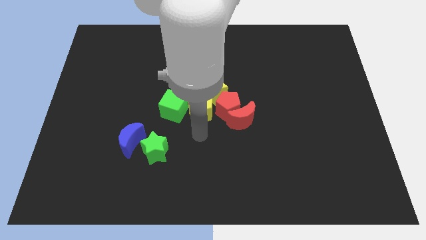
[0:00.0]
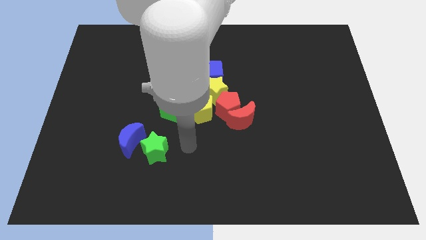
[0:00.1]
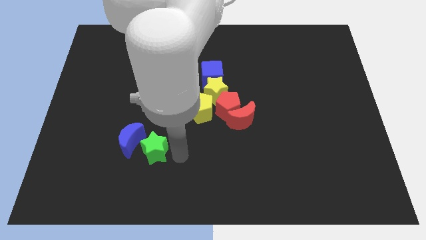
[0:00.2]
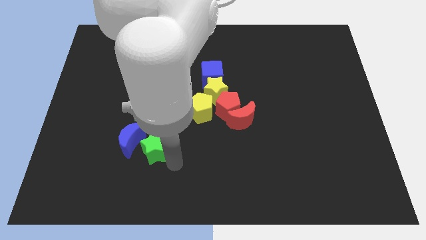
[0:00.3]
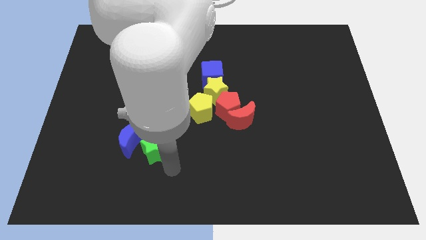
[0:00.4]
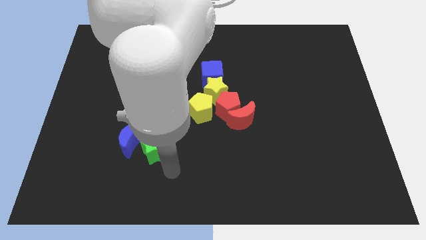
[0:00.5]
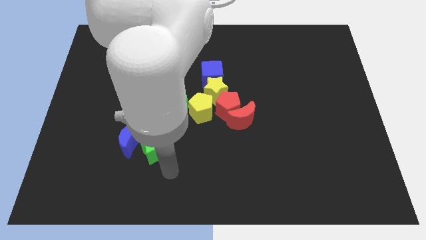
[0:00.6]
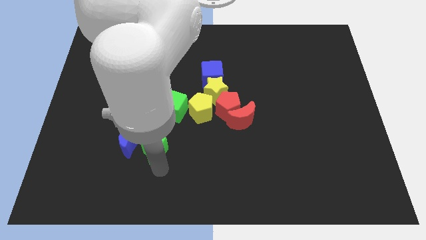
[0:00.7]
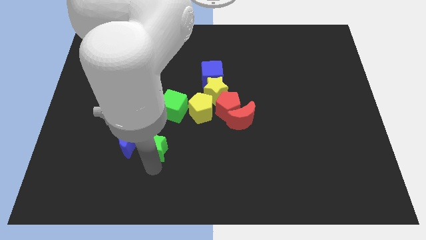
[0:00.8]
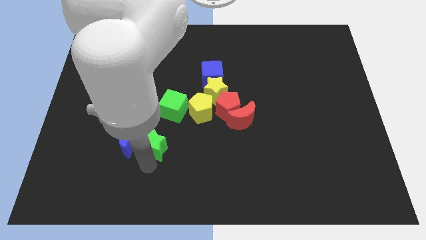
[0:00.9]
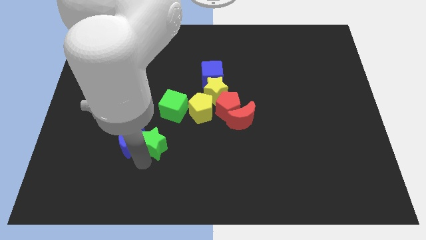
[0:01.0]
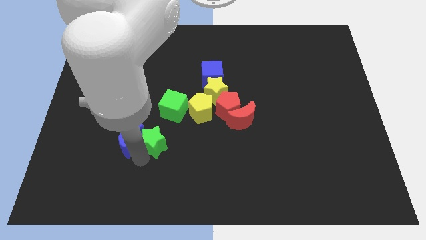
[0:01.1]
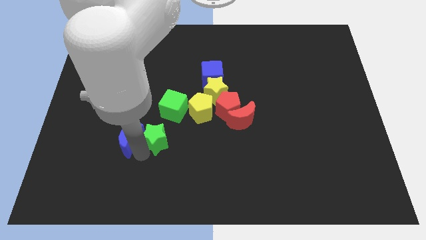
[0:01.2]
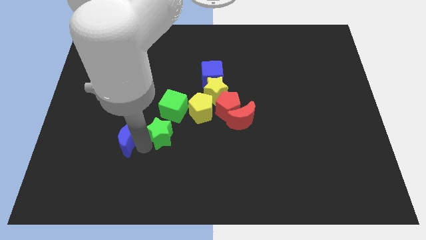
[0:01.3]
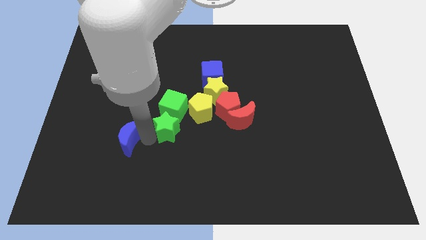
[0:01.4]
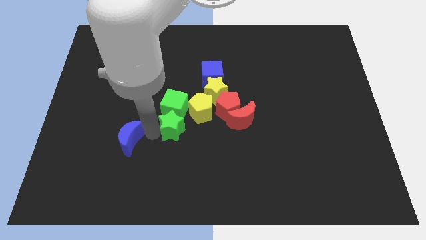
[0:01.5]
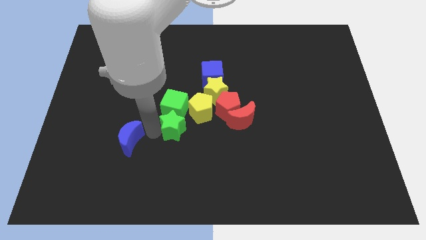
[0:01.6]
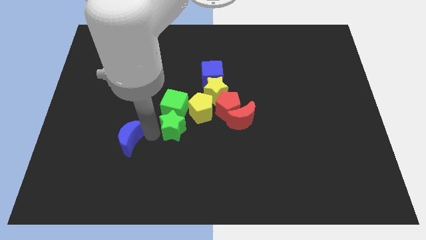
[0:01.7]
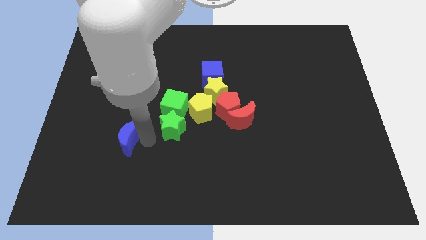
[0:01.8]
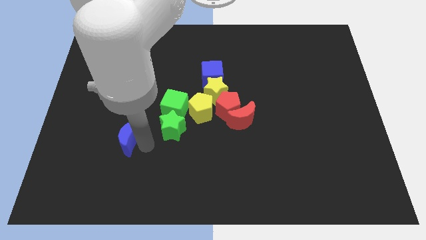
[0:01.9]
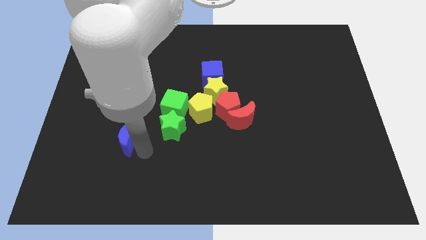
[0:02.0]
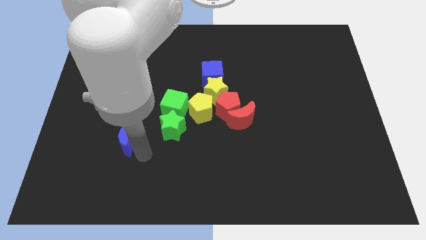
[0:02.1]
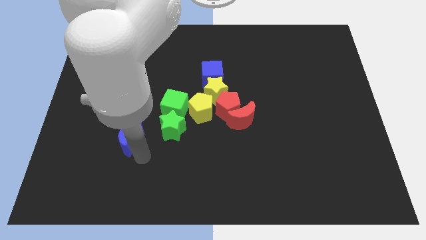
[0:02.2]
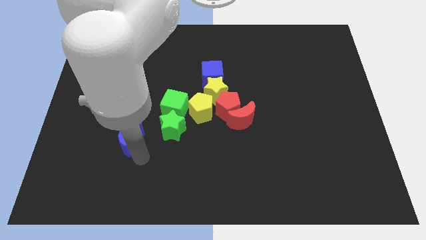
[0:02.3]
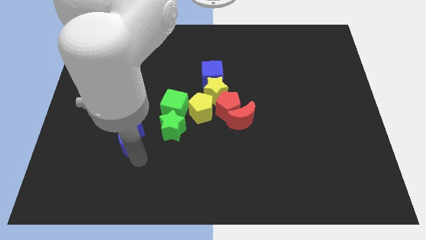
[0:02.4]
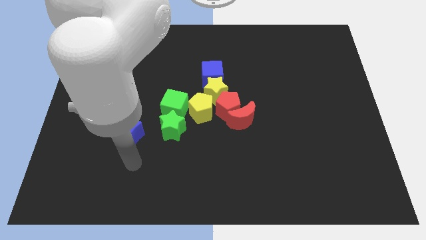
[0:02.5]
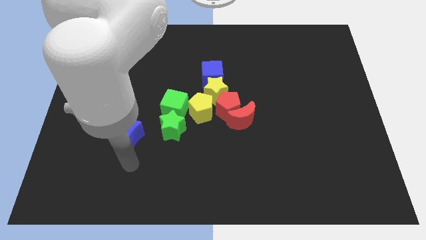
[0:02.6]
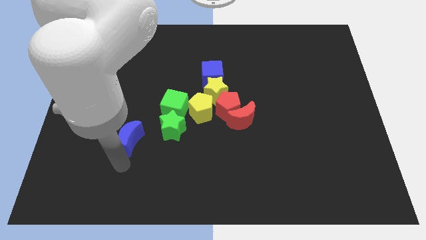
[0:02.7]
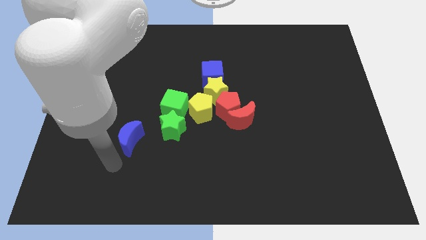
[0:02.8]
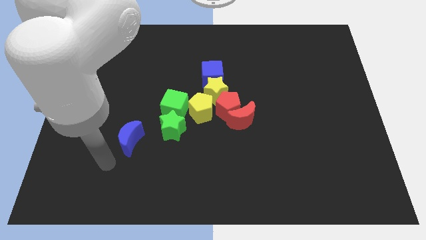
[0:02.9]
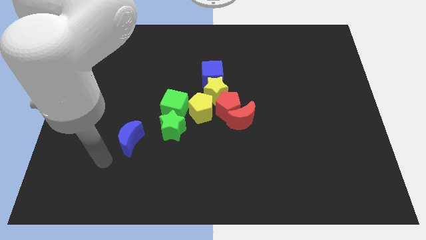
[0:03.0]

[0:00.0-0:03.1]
move green star to the bottom of the green block

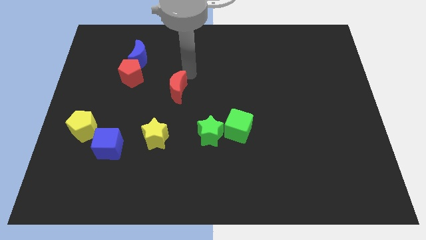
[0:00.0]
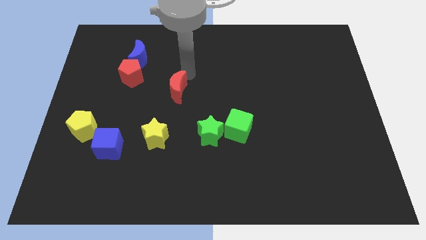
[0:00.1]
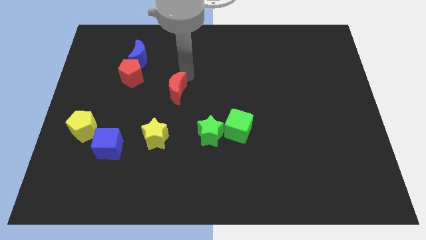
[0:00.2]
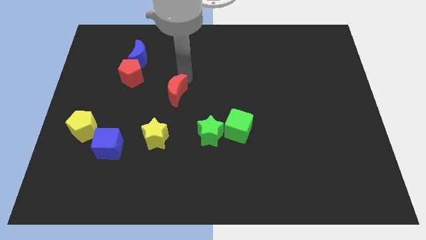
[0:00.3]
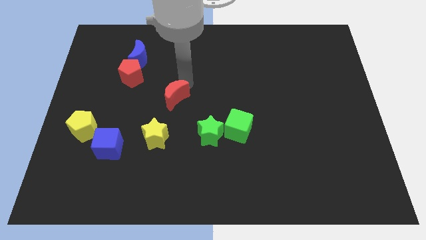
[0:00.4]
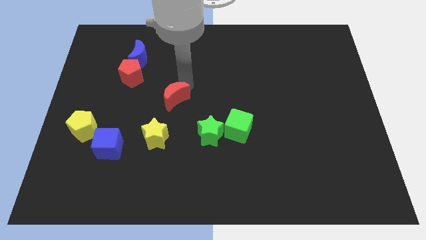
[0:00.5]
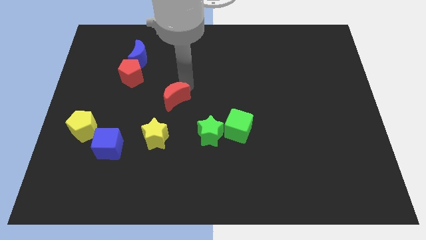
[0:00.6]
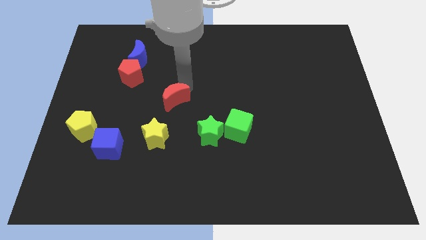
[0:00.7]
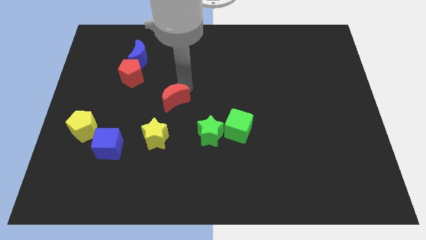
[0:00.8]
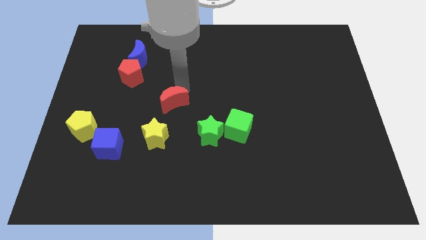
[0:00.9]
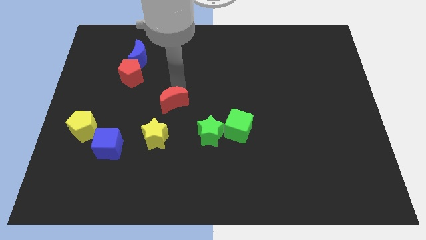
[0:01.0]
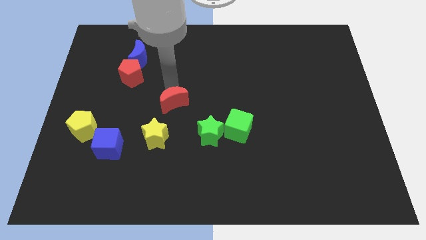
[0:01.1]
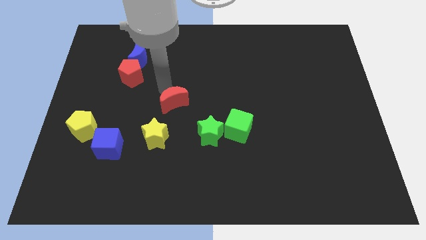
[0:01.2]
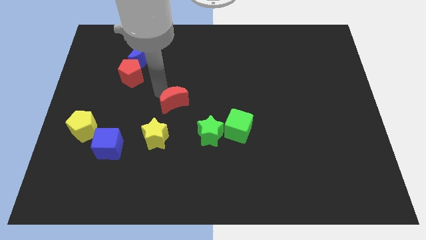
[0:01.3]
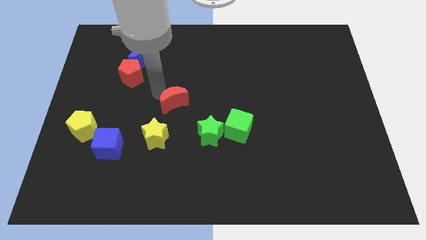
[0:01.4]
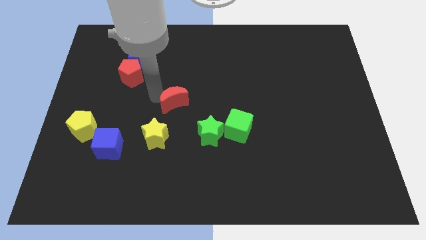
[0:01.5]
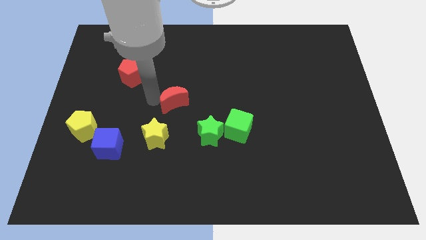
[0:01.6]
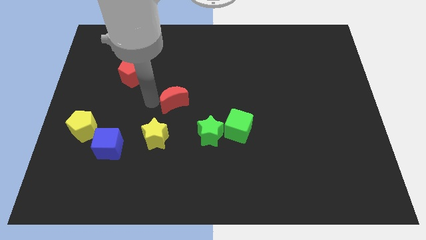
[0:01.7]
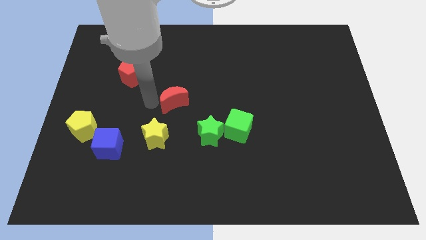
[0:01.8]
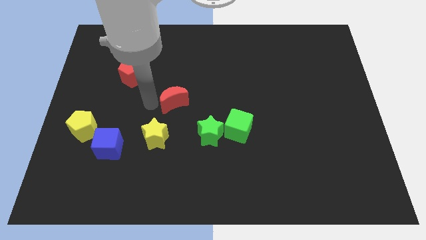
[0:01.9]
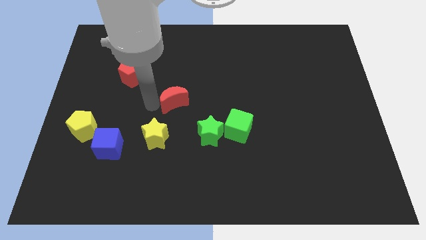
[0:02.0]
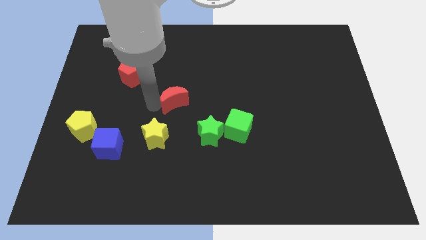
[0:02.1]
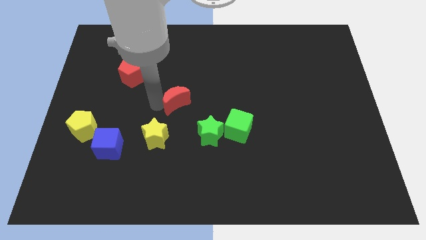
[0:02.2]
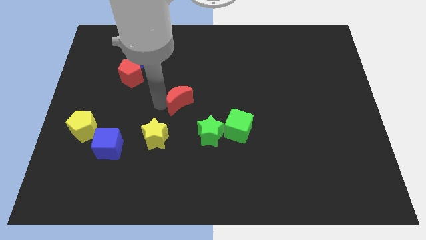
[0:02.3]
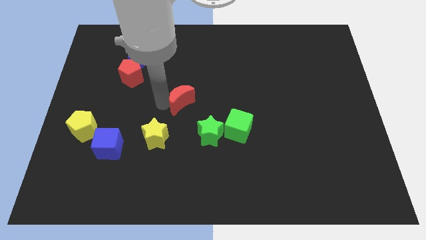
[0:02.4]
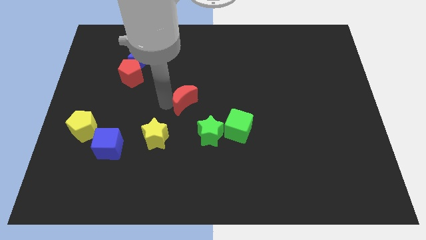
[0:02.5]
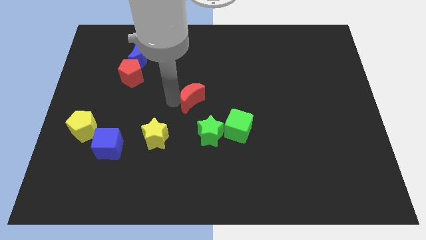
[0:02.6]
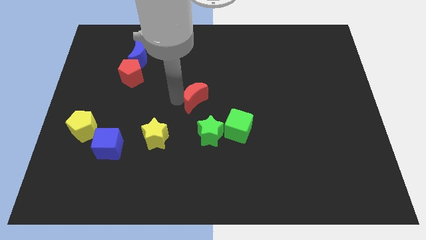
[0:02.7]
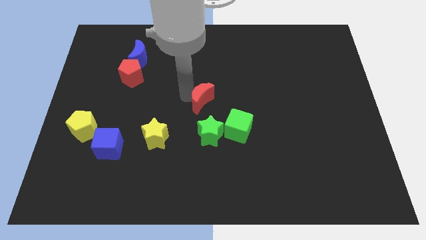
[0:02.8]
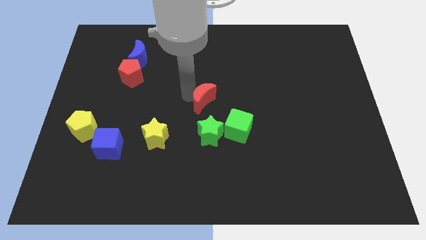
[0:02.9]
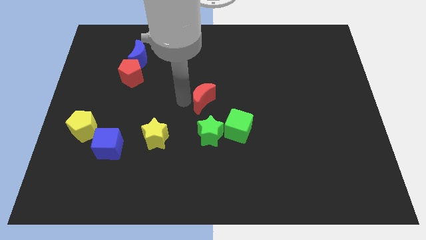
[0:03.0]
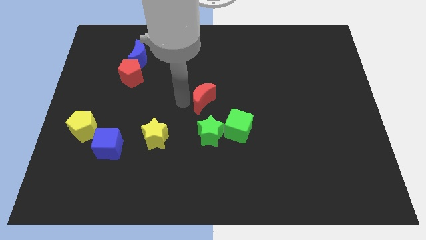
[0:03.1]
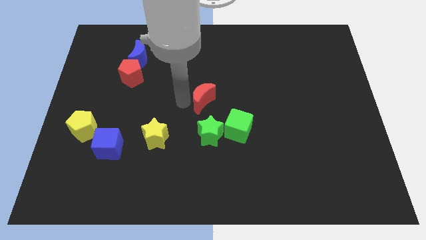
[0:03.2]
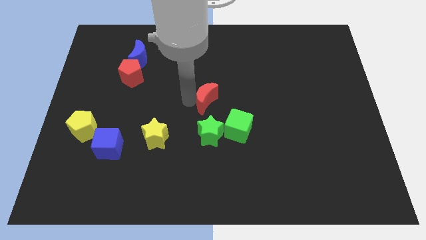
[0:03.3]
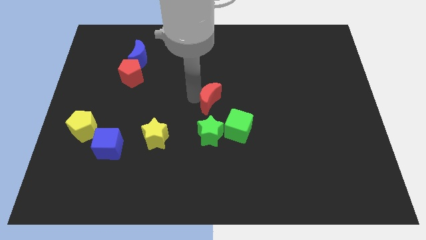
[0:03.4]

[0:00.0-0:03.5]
push the red crescent above the green star

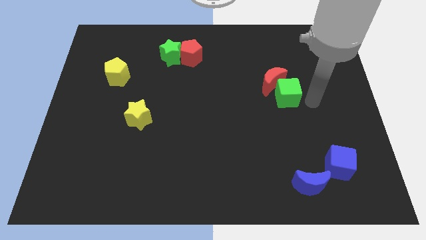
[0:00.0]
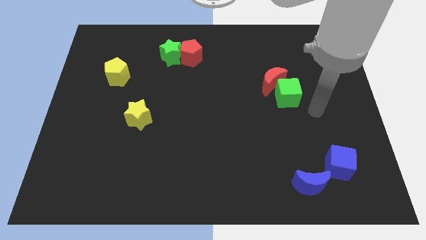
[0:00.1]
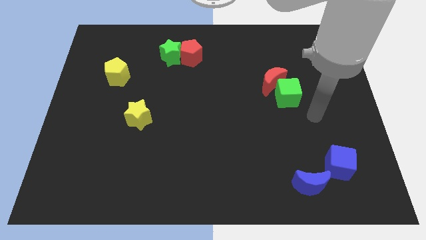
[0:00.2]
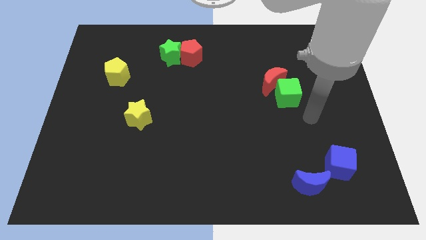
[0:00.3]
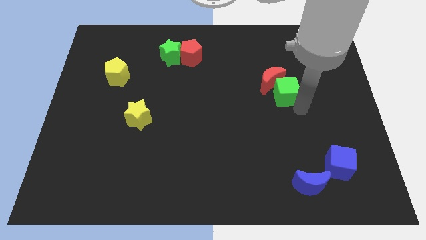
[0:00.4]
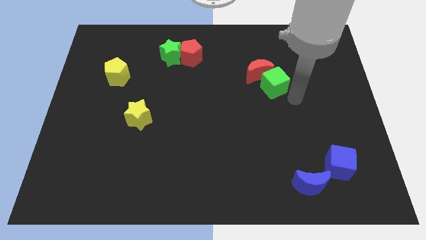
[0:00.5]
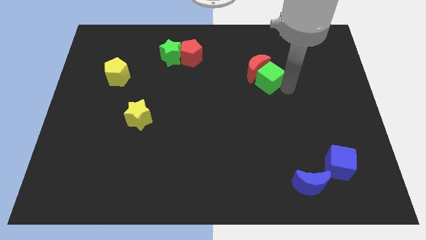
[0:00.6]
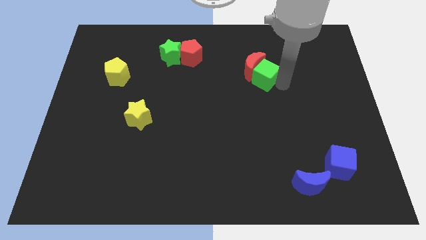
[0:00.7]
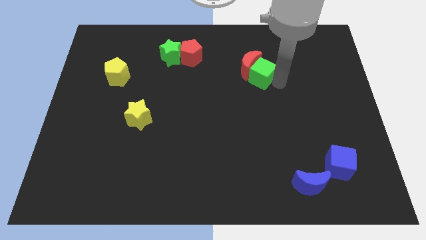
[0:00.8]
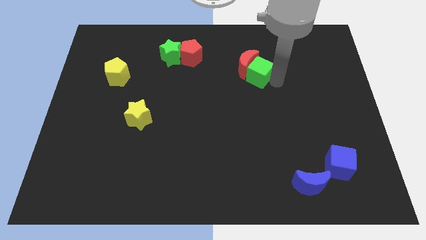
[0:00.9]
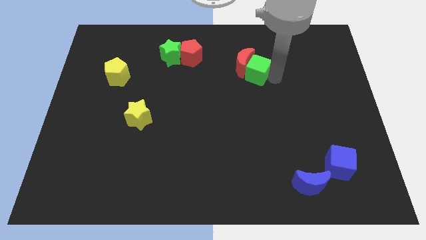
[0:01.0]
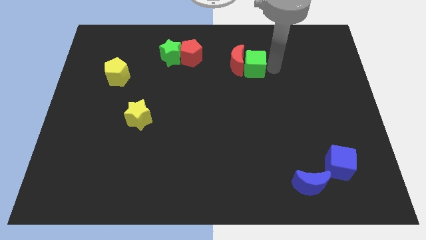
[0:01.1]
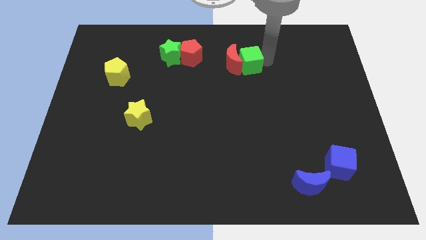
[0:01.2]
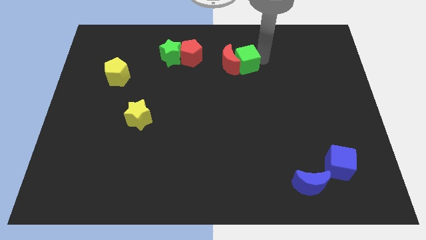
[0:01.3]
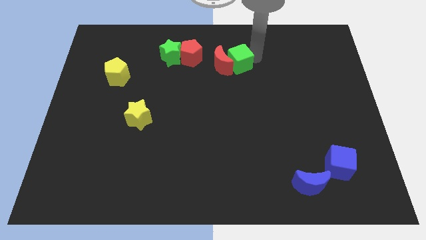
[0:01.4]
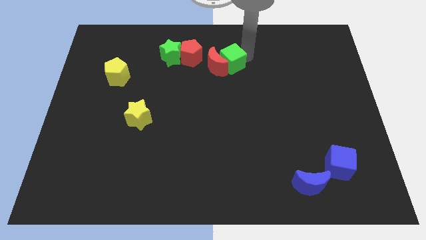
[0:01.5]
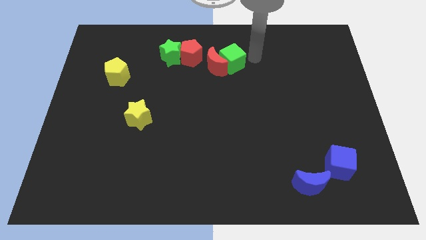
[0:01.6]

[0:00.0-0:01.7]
push the green cube along with red crescent to the top center of the board

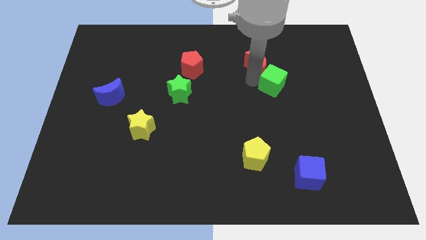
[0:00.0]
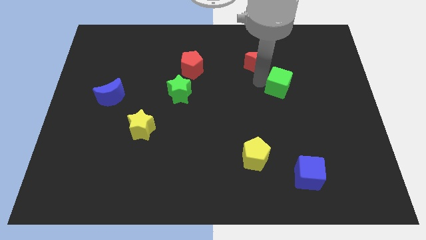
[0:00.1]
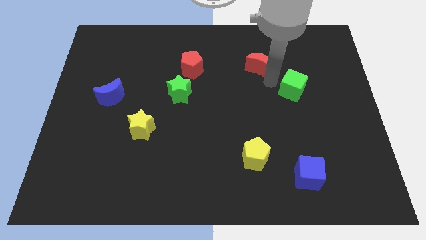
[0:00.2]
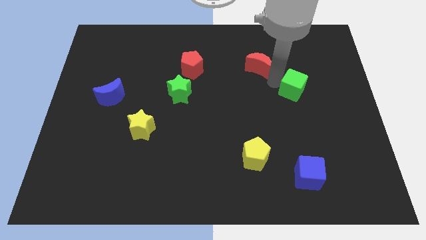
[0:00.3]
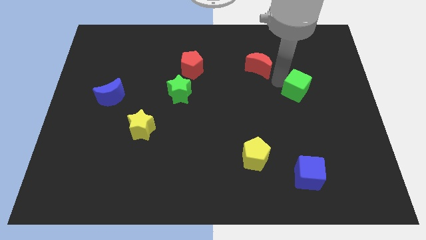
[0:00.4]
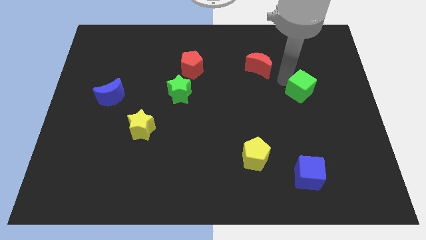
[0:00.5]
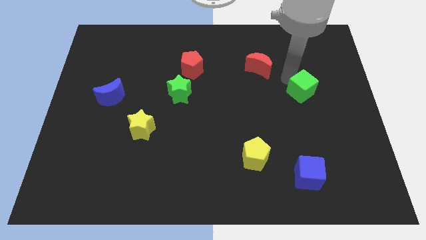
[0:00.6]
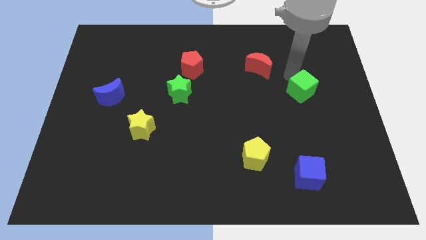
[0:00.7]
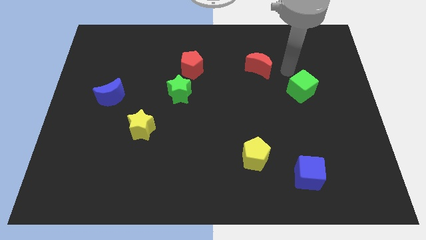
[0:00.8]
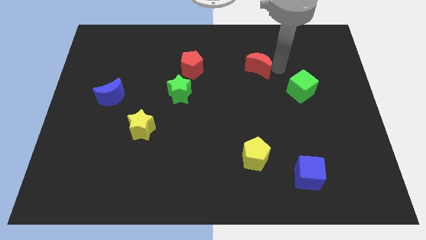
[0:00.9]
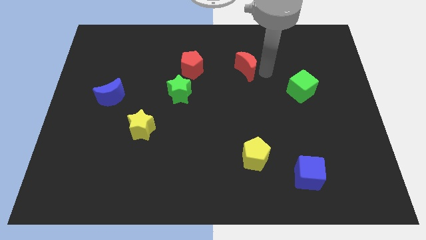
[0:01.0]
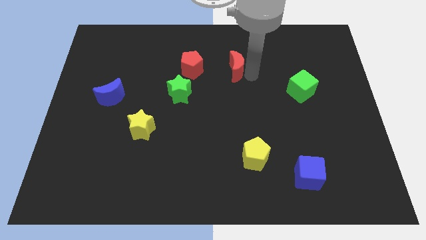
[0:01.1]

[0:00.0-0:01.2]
push the red crescent away from green cube
